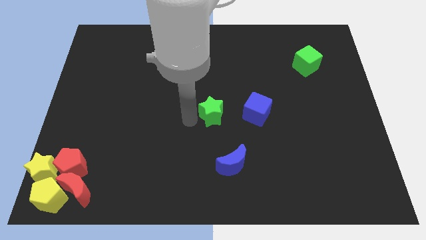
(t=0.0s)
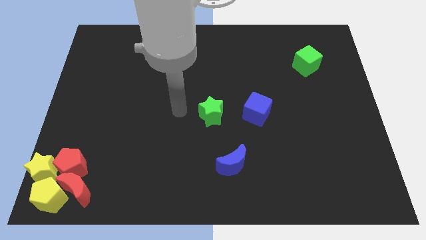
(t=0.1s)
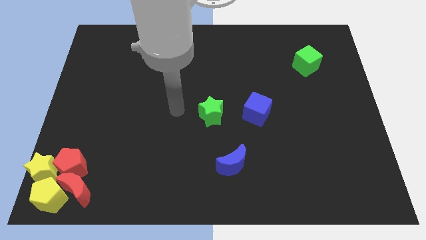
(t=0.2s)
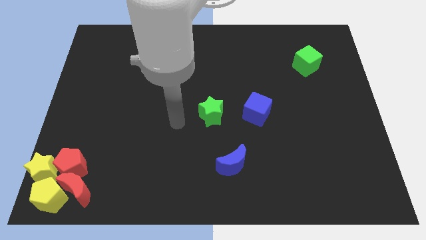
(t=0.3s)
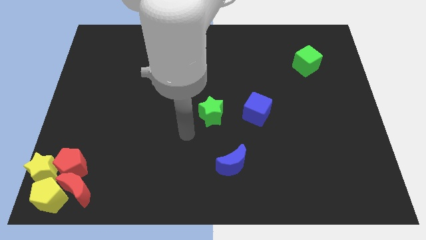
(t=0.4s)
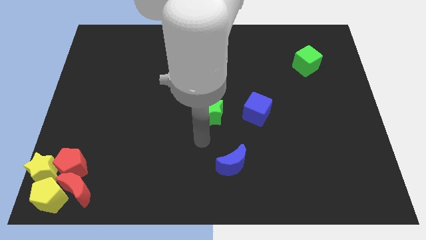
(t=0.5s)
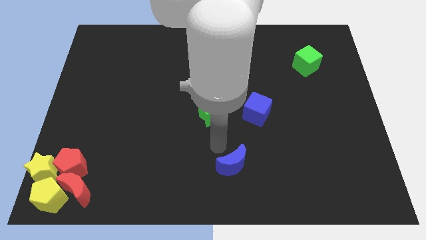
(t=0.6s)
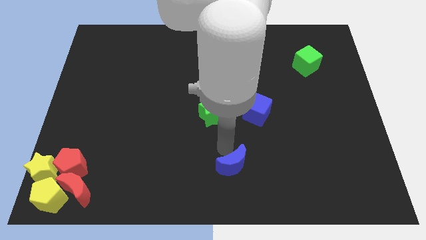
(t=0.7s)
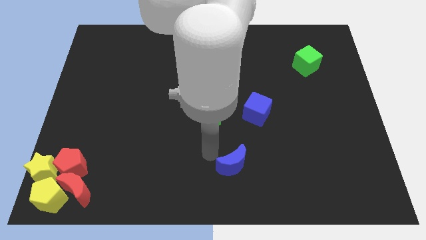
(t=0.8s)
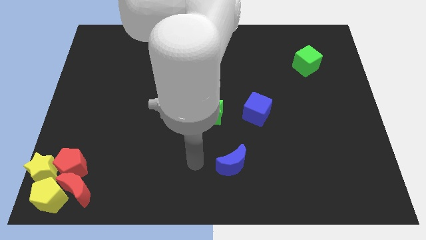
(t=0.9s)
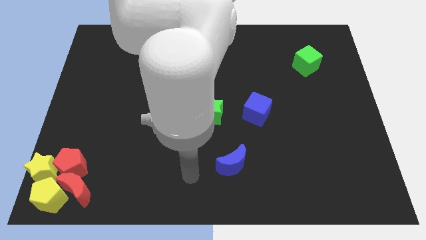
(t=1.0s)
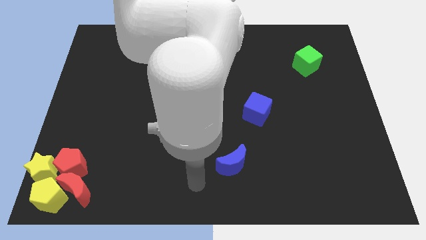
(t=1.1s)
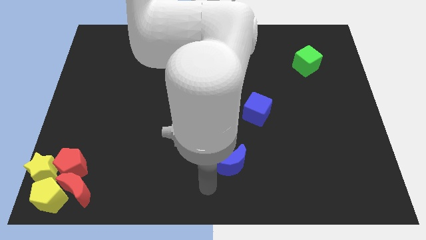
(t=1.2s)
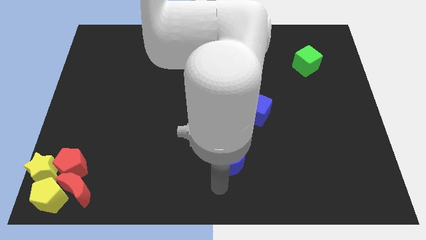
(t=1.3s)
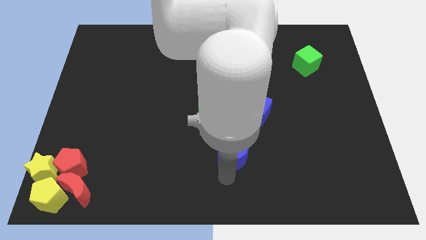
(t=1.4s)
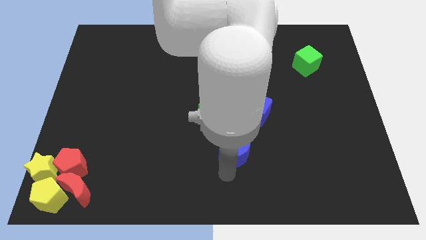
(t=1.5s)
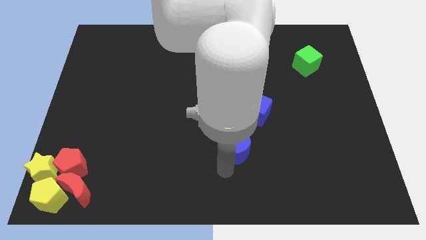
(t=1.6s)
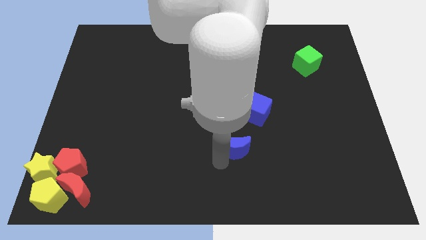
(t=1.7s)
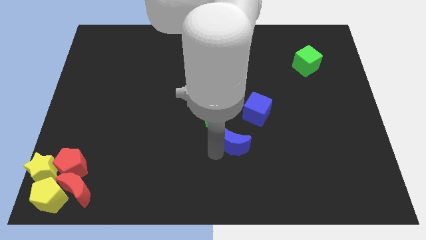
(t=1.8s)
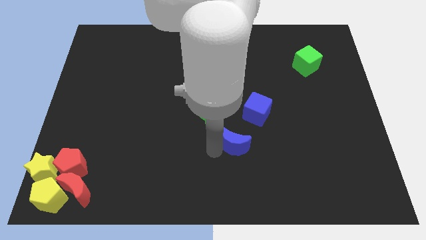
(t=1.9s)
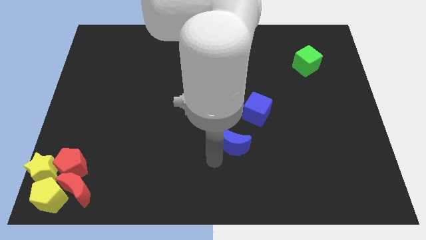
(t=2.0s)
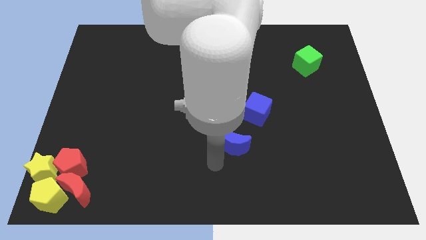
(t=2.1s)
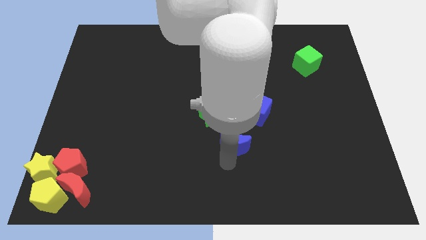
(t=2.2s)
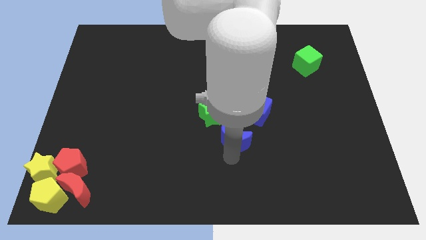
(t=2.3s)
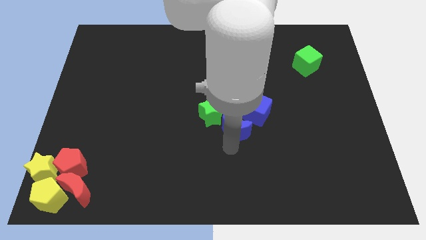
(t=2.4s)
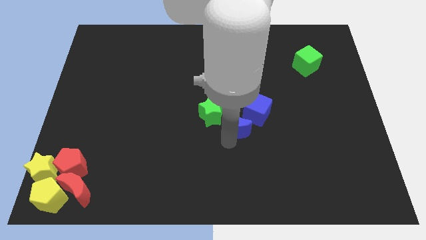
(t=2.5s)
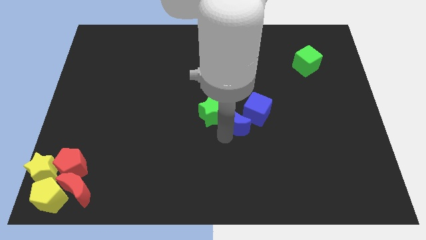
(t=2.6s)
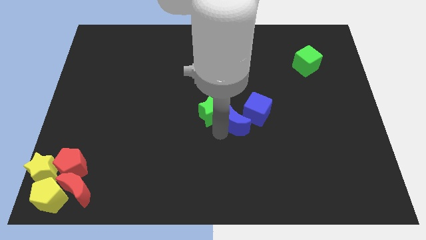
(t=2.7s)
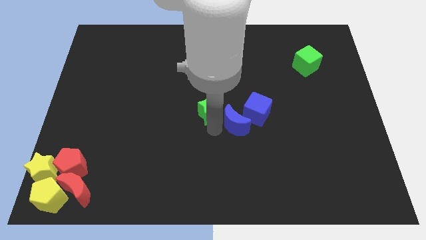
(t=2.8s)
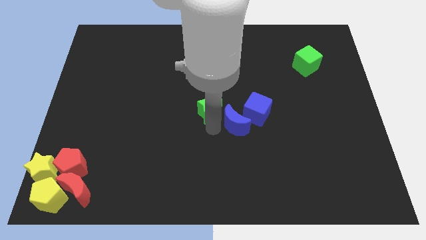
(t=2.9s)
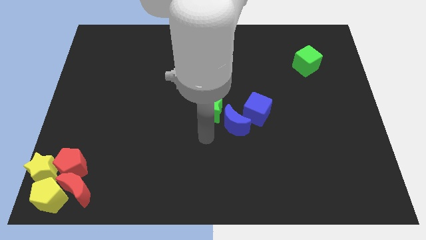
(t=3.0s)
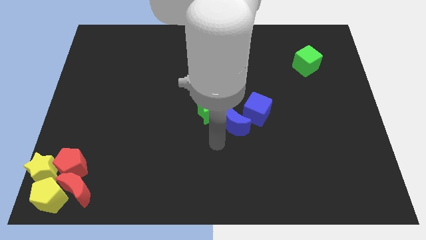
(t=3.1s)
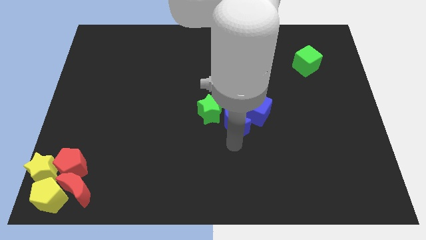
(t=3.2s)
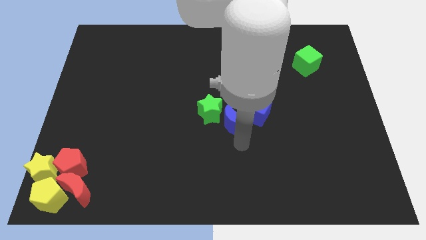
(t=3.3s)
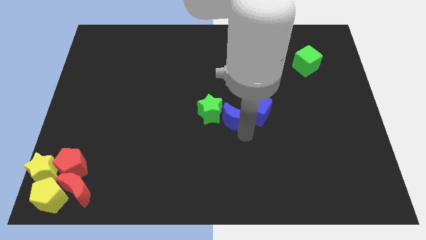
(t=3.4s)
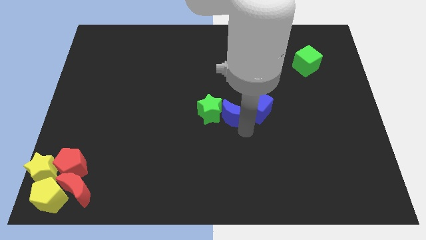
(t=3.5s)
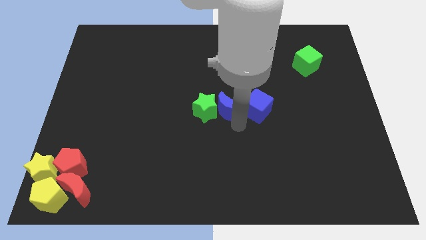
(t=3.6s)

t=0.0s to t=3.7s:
place the blue crescent in between the green star and the blue cube

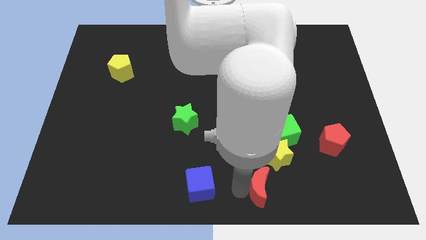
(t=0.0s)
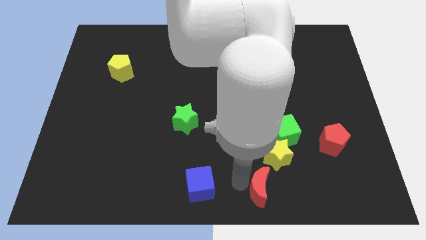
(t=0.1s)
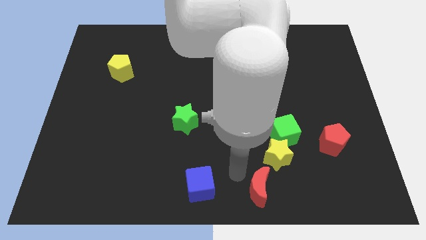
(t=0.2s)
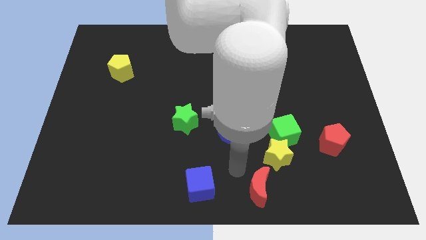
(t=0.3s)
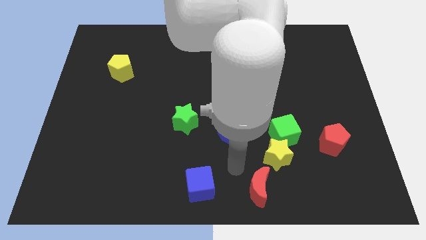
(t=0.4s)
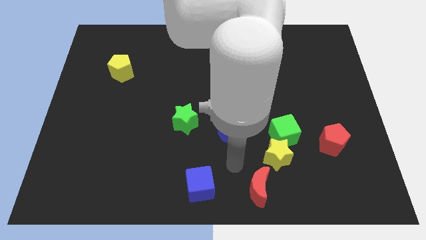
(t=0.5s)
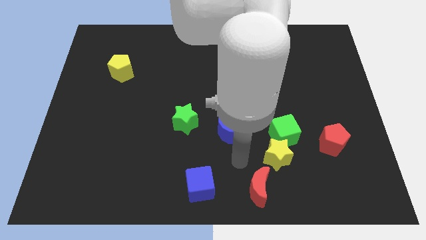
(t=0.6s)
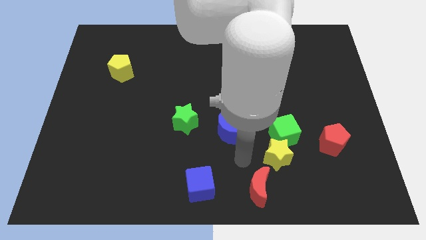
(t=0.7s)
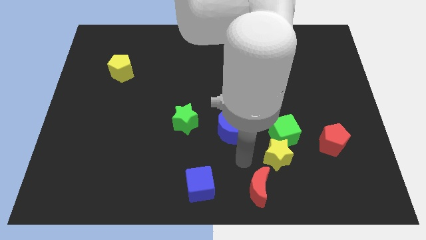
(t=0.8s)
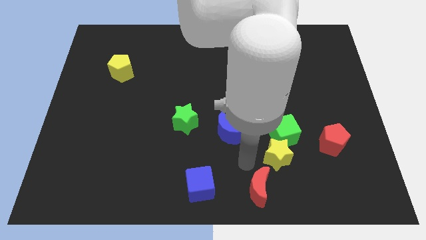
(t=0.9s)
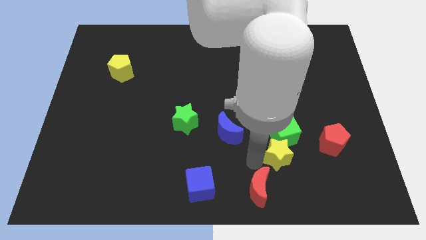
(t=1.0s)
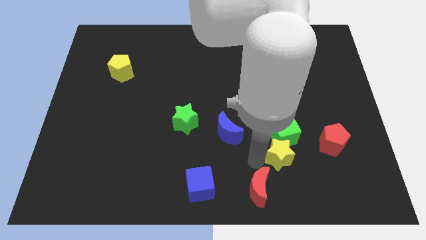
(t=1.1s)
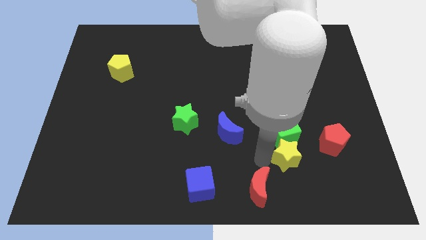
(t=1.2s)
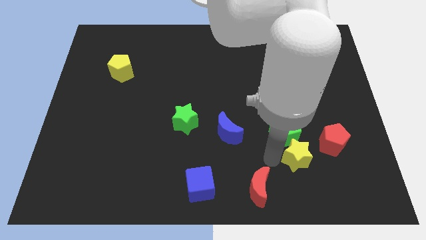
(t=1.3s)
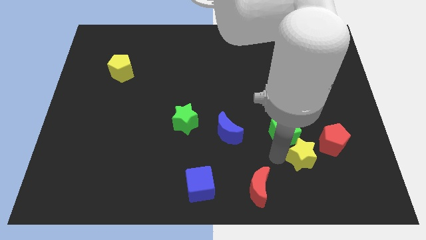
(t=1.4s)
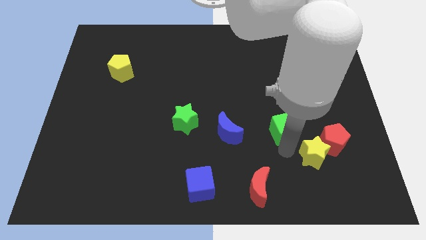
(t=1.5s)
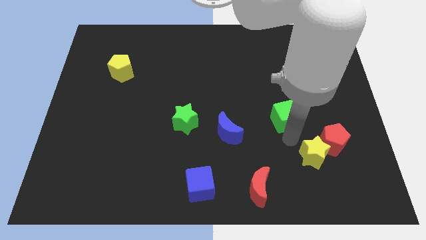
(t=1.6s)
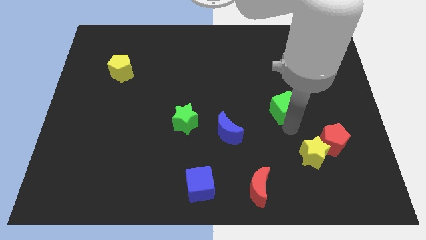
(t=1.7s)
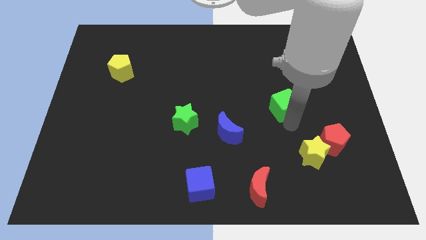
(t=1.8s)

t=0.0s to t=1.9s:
separate the yellow star and green cube from each other

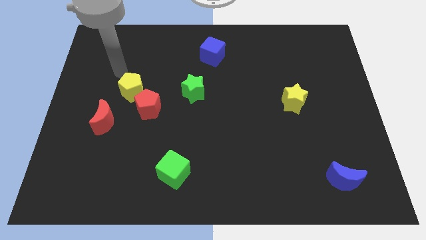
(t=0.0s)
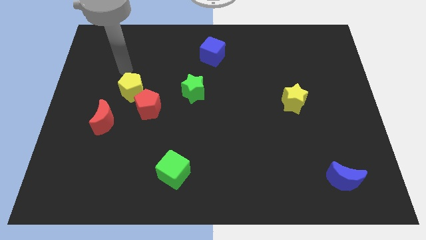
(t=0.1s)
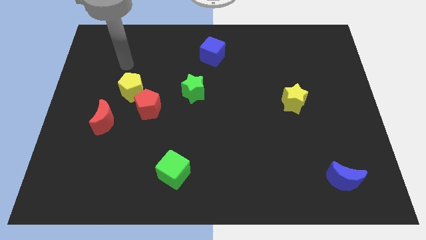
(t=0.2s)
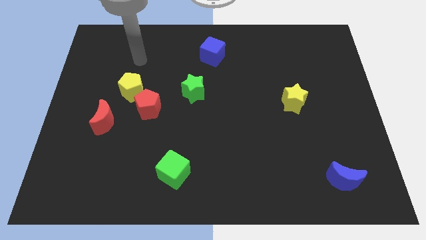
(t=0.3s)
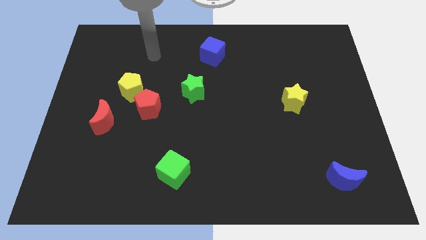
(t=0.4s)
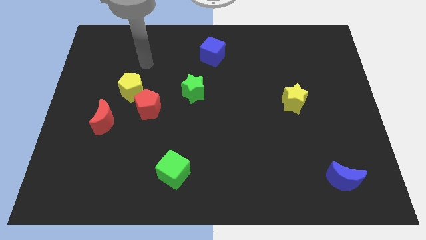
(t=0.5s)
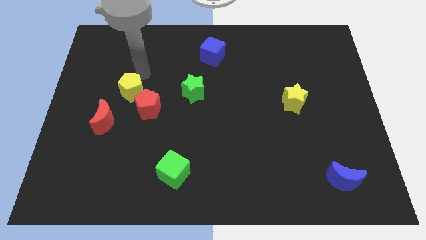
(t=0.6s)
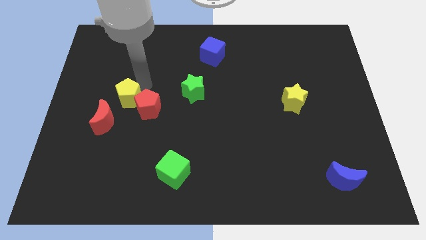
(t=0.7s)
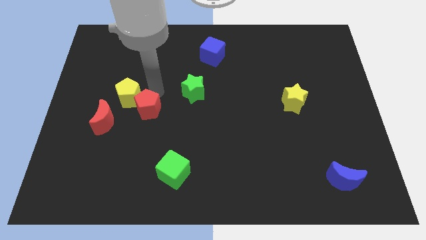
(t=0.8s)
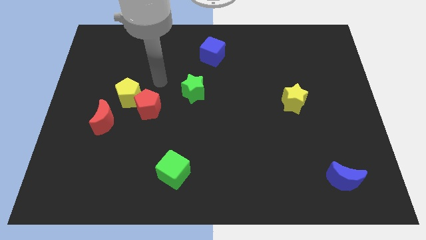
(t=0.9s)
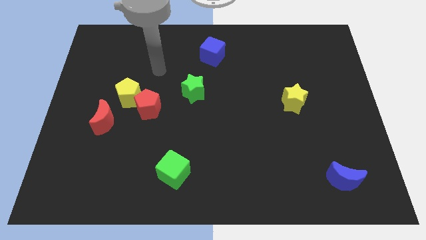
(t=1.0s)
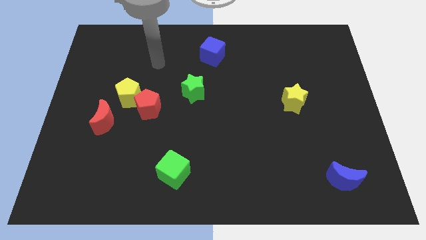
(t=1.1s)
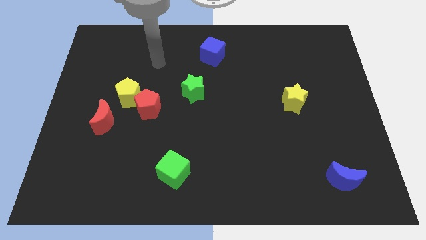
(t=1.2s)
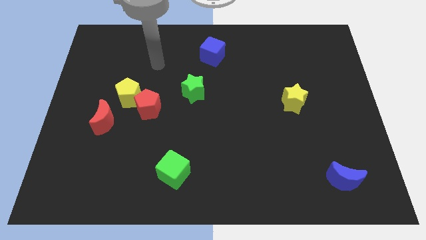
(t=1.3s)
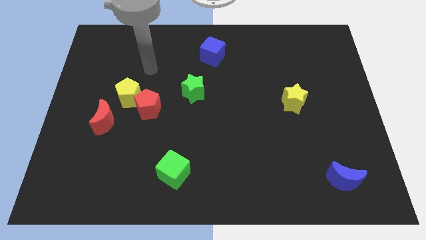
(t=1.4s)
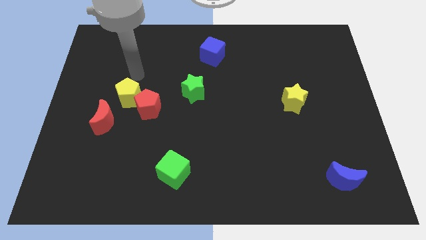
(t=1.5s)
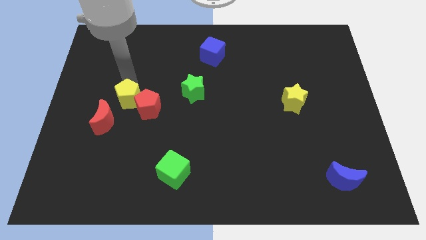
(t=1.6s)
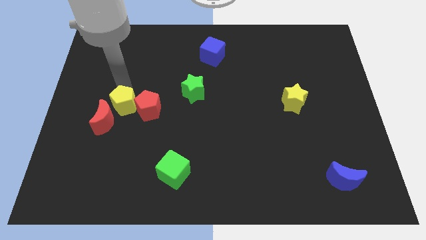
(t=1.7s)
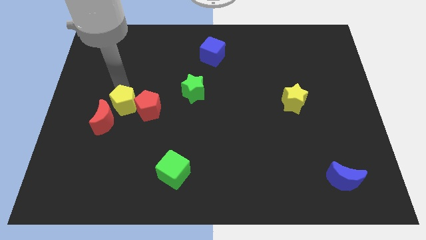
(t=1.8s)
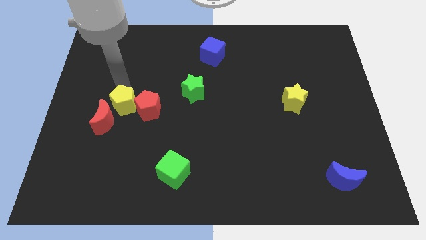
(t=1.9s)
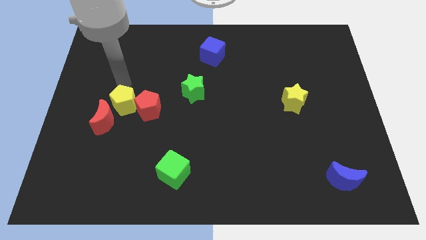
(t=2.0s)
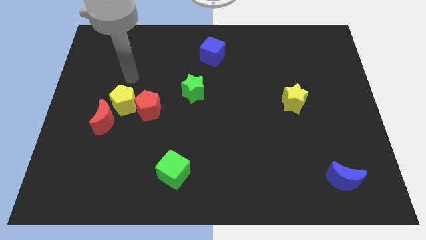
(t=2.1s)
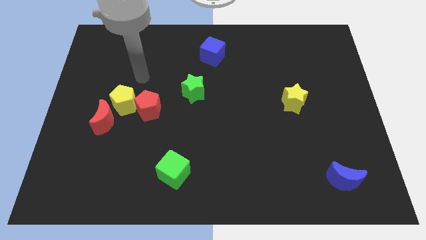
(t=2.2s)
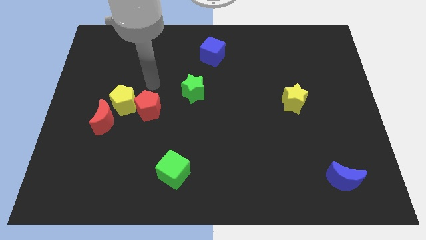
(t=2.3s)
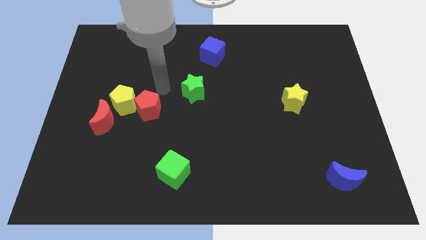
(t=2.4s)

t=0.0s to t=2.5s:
push the yellow pentagon to the left of the red pentagon

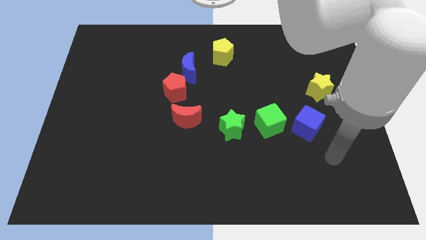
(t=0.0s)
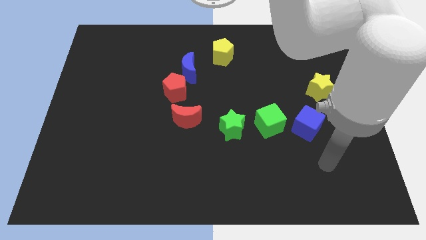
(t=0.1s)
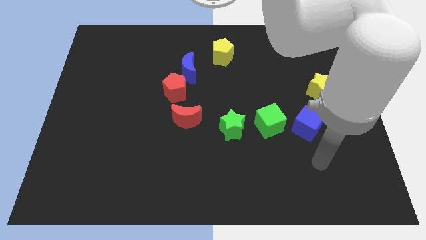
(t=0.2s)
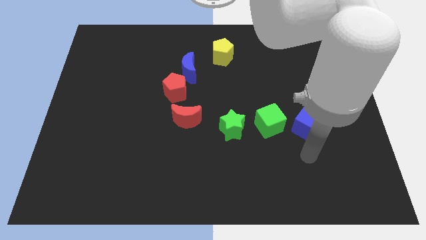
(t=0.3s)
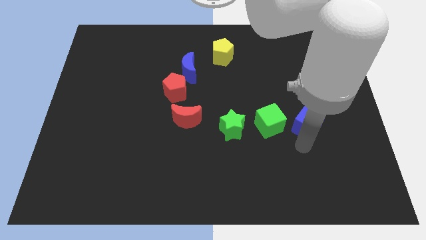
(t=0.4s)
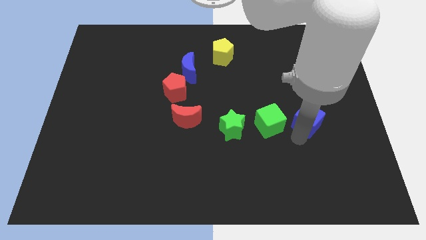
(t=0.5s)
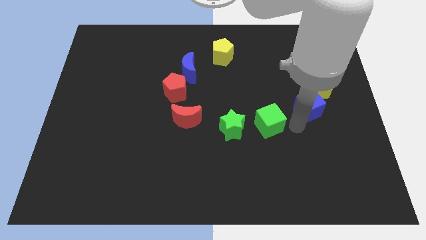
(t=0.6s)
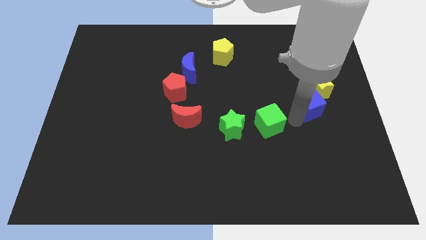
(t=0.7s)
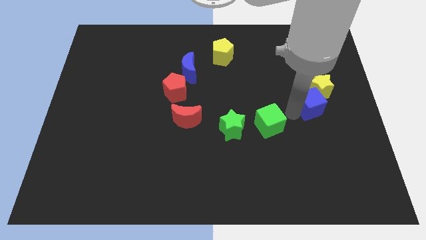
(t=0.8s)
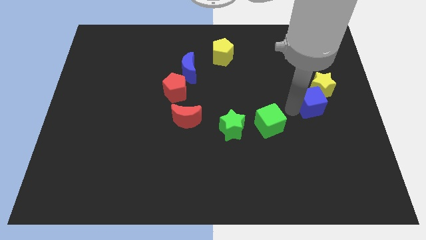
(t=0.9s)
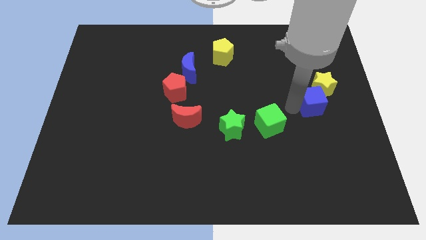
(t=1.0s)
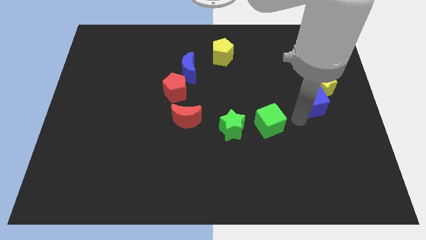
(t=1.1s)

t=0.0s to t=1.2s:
push the blue cube into the yellow star
